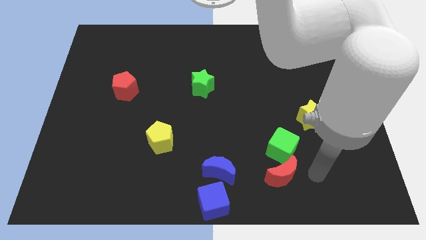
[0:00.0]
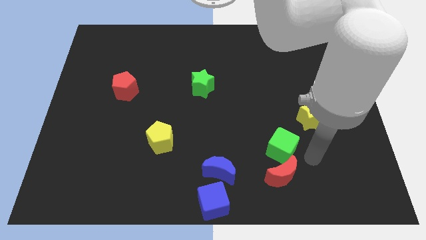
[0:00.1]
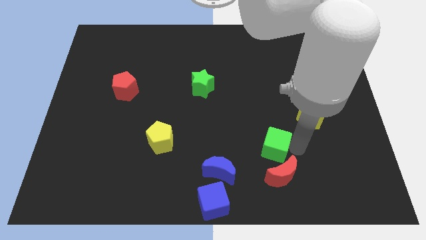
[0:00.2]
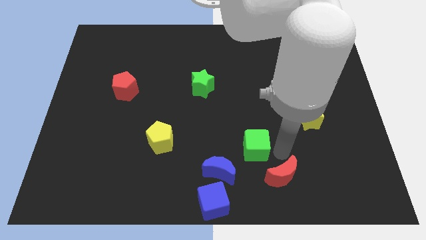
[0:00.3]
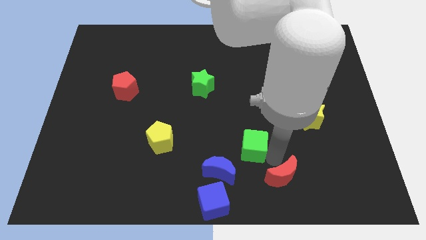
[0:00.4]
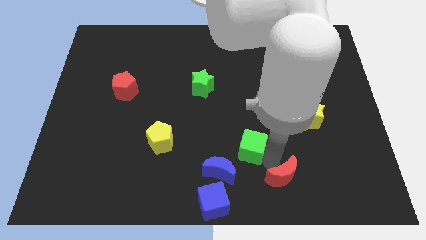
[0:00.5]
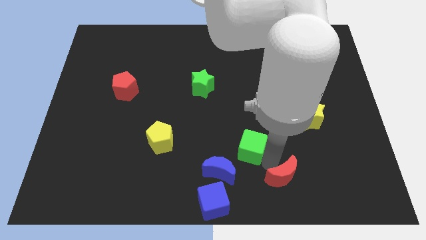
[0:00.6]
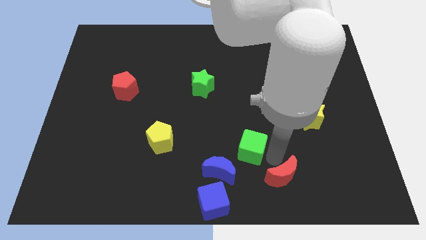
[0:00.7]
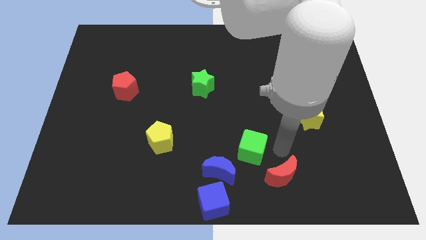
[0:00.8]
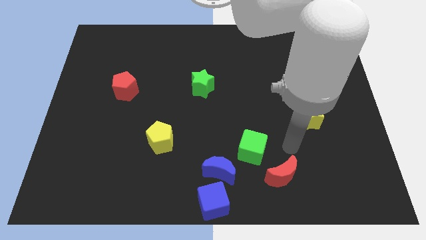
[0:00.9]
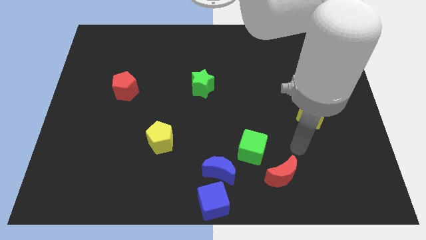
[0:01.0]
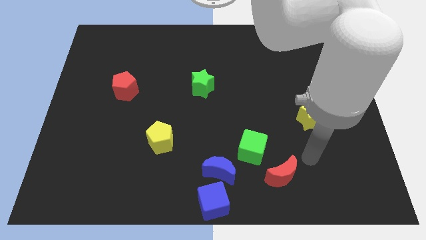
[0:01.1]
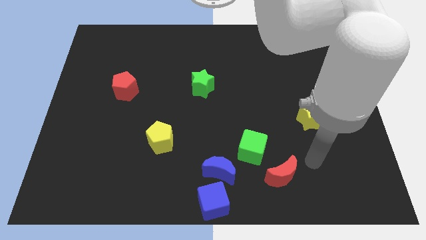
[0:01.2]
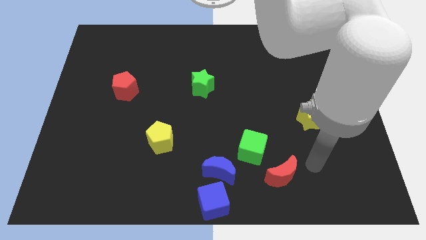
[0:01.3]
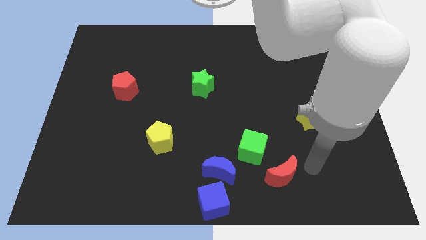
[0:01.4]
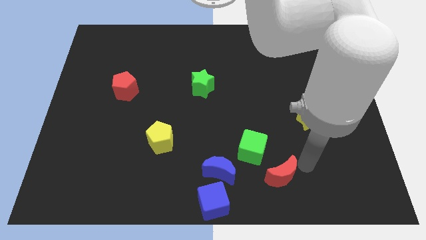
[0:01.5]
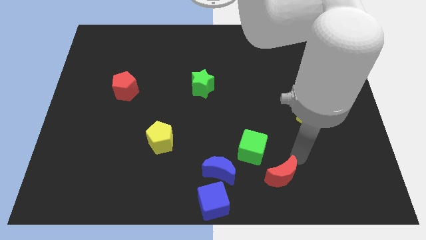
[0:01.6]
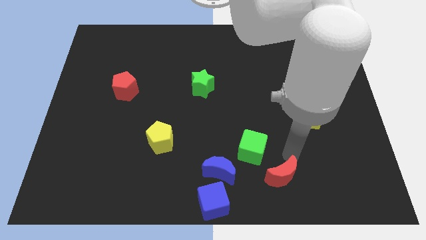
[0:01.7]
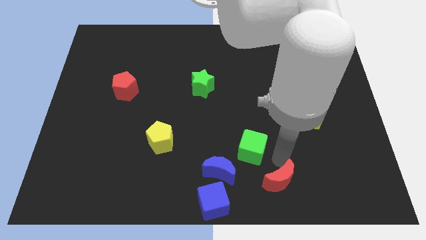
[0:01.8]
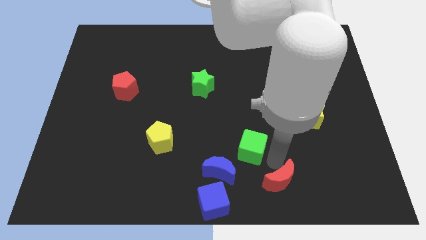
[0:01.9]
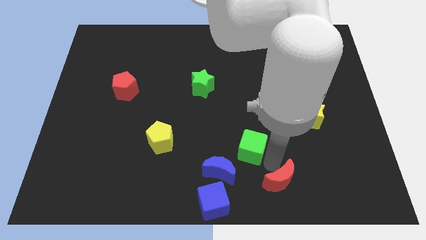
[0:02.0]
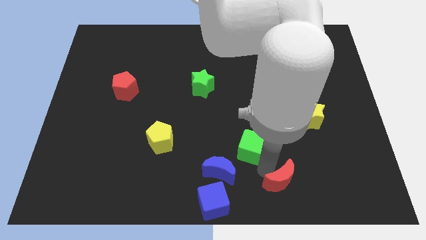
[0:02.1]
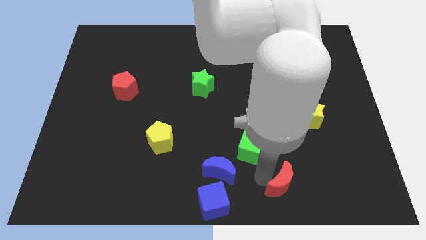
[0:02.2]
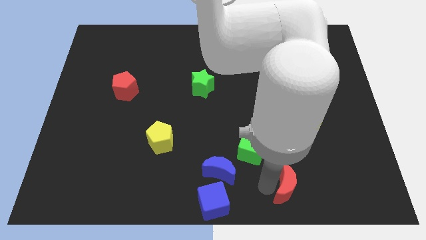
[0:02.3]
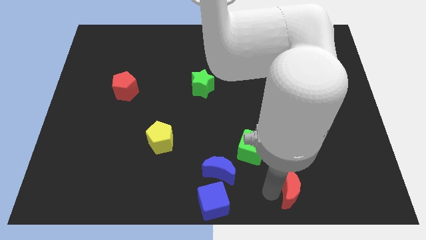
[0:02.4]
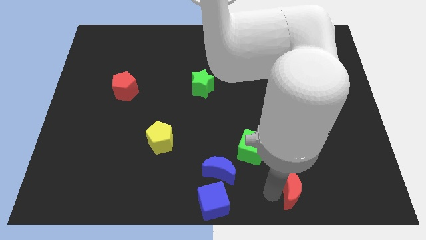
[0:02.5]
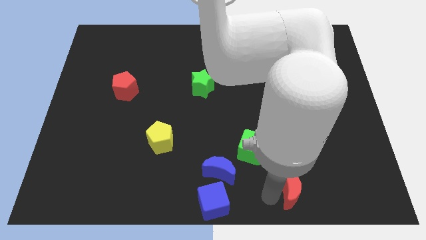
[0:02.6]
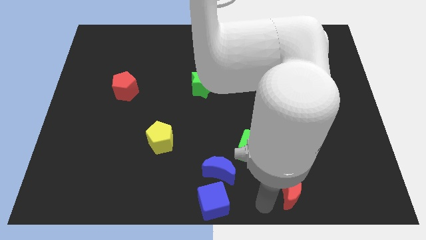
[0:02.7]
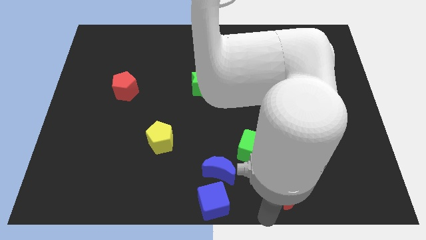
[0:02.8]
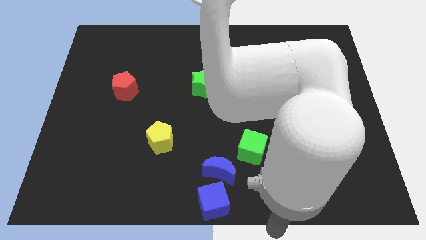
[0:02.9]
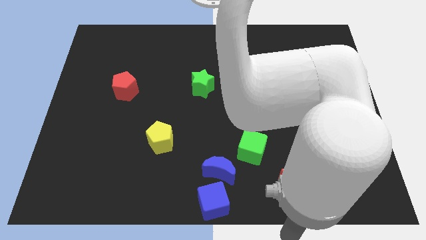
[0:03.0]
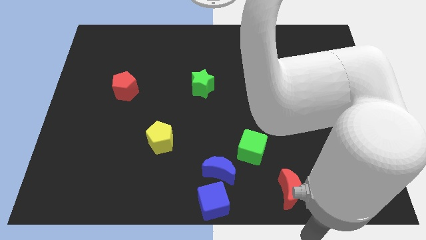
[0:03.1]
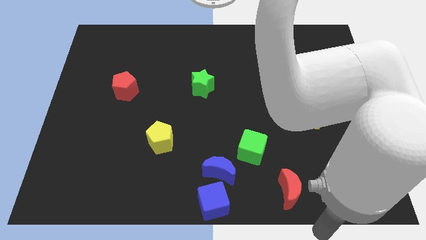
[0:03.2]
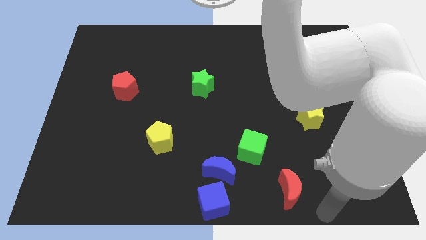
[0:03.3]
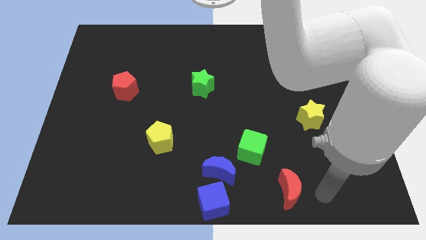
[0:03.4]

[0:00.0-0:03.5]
separate the green cube and the red crescent

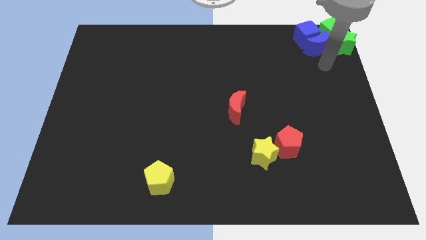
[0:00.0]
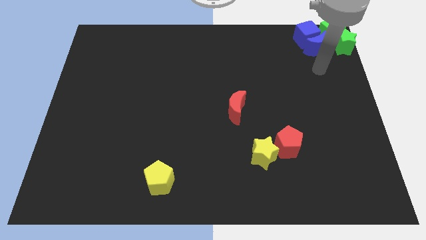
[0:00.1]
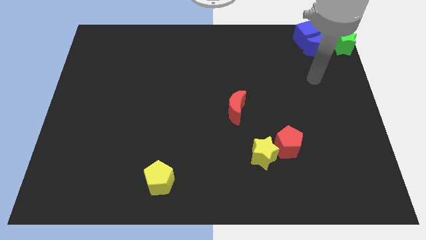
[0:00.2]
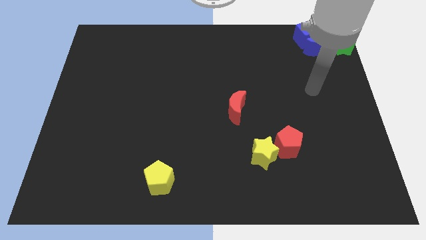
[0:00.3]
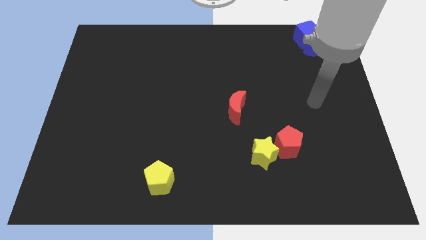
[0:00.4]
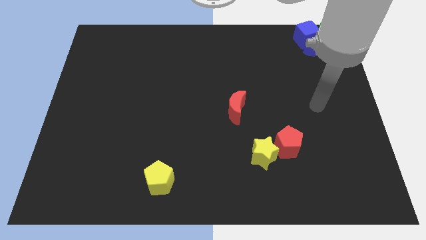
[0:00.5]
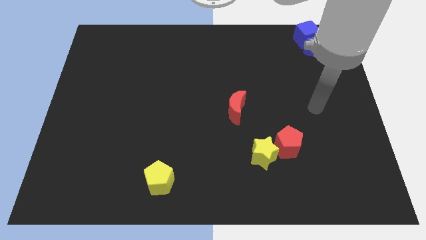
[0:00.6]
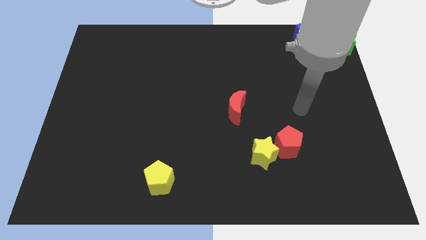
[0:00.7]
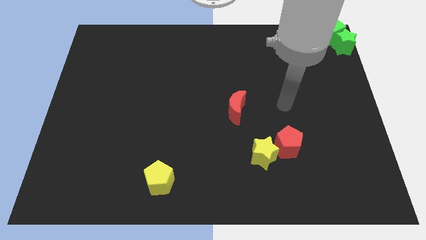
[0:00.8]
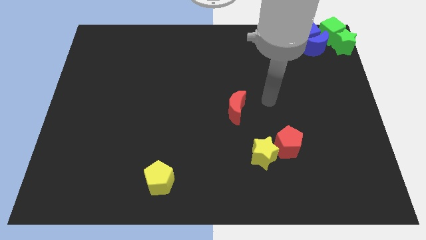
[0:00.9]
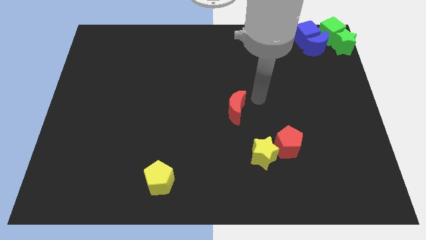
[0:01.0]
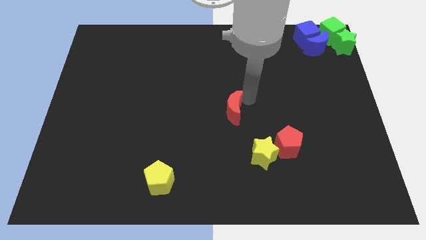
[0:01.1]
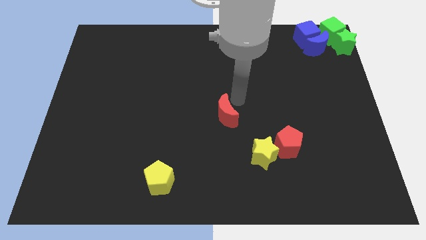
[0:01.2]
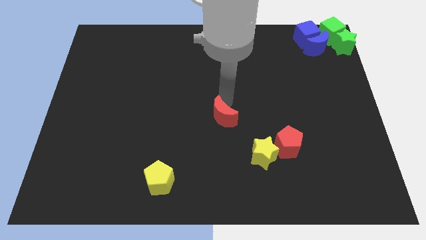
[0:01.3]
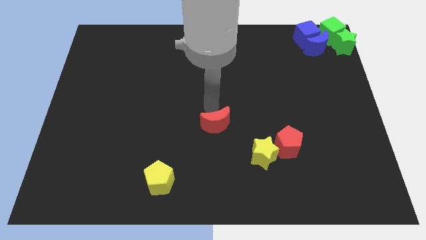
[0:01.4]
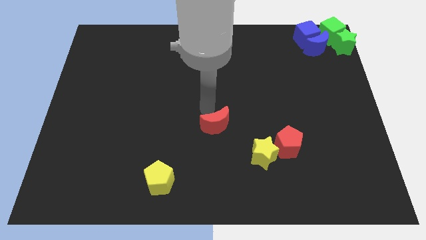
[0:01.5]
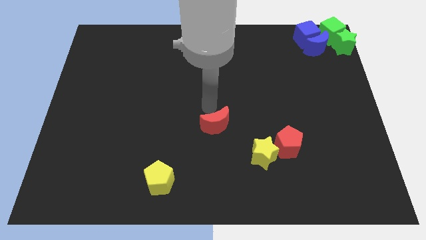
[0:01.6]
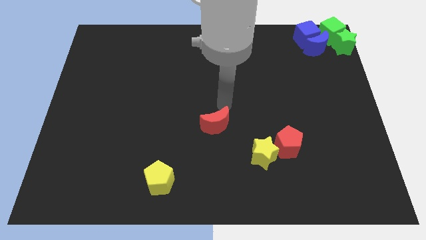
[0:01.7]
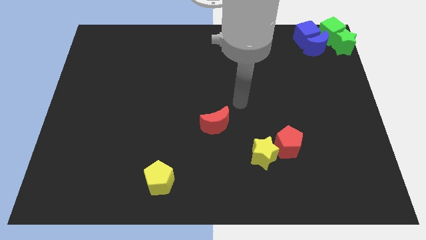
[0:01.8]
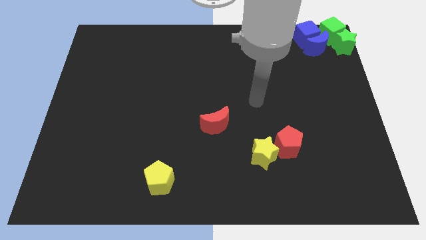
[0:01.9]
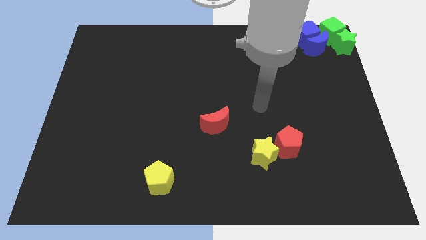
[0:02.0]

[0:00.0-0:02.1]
move the red moon diagonally on the top left side of the yellow star

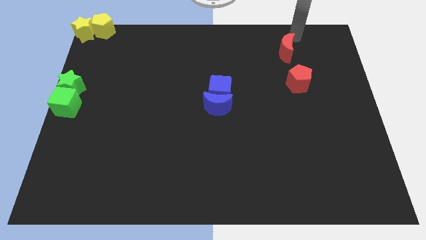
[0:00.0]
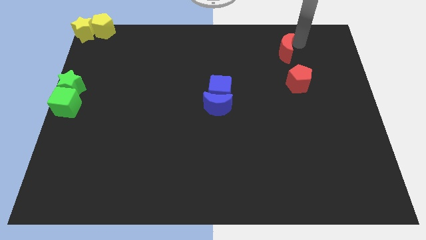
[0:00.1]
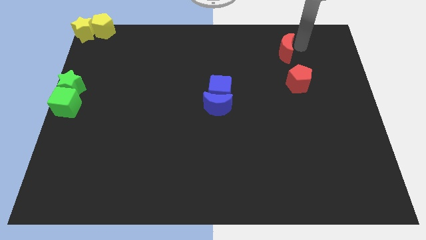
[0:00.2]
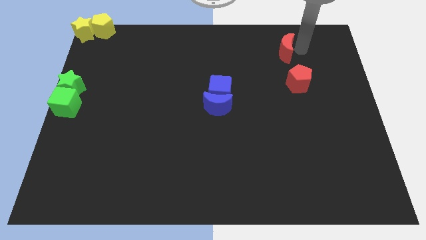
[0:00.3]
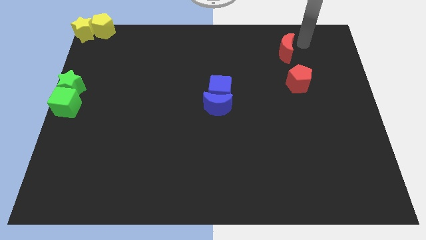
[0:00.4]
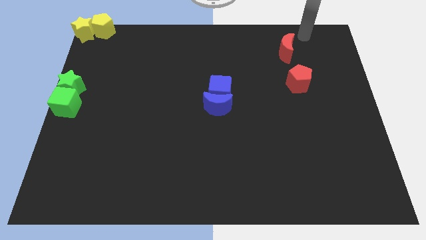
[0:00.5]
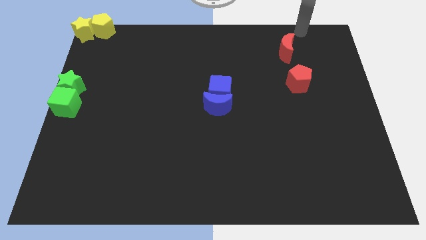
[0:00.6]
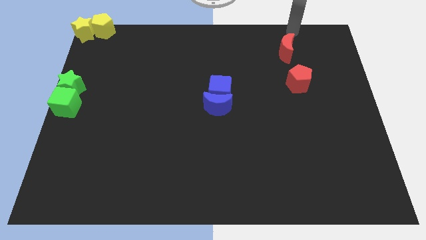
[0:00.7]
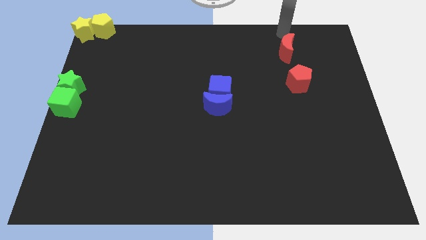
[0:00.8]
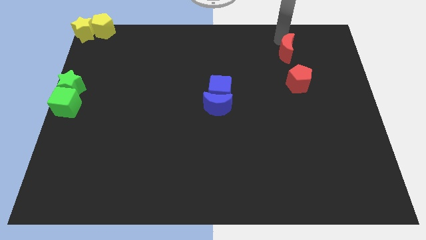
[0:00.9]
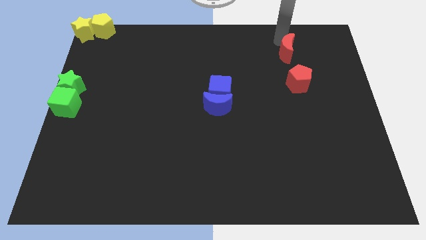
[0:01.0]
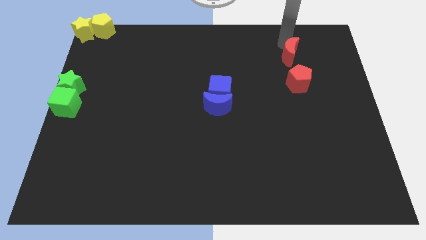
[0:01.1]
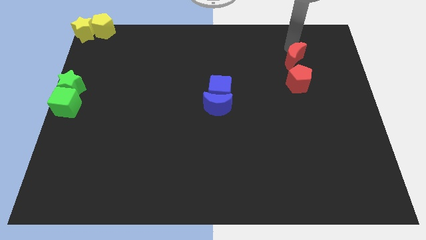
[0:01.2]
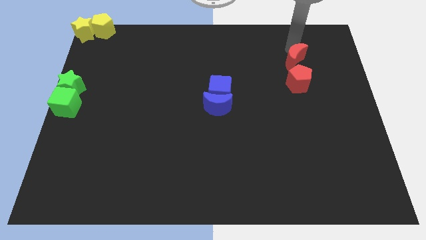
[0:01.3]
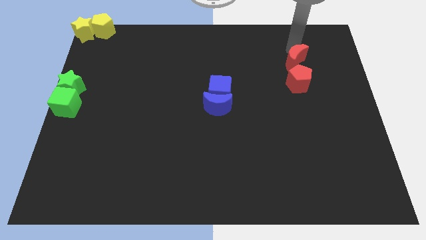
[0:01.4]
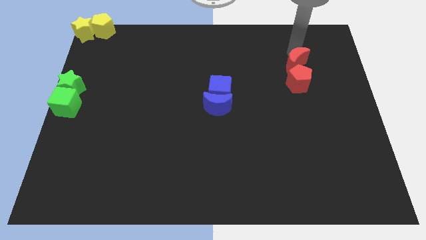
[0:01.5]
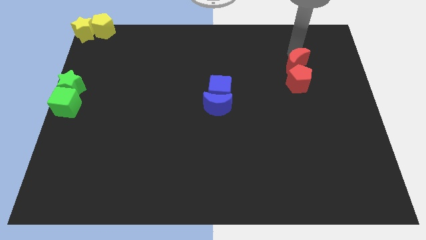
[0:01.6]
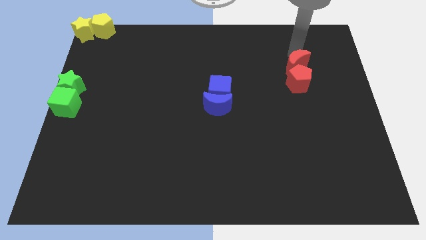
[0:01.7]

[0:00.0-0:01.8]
place the red moon at the top of red pentagon

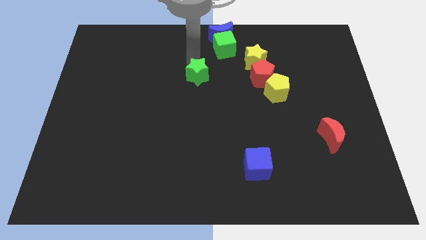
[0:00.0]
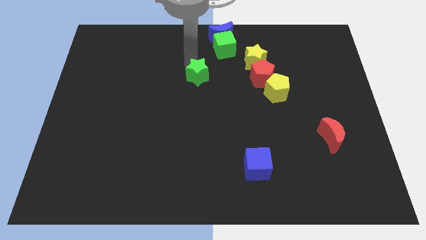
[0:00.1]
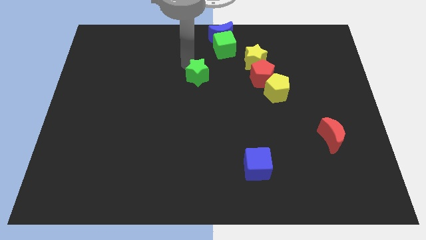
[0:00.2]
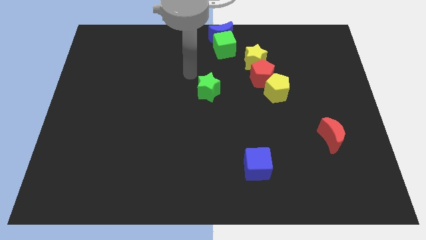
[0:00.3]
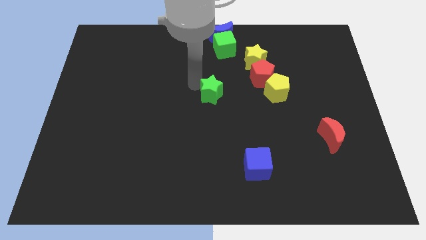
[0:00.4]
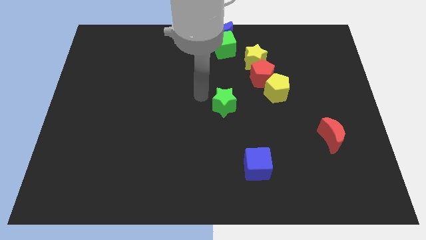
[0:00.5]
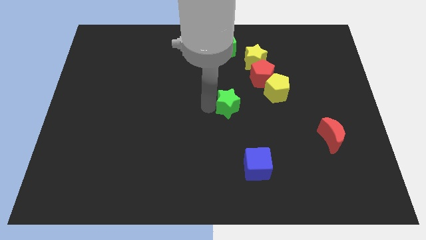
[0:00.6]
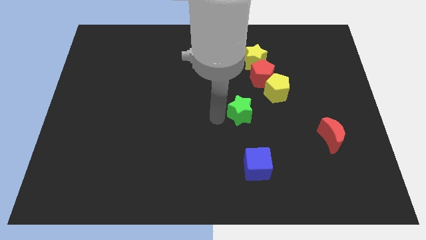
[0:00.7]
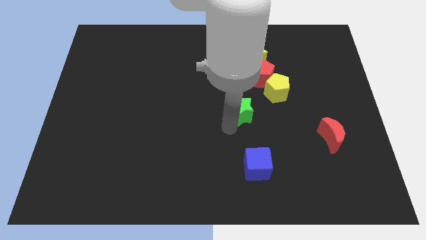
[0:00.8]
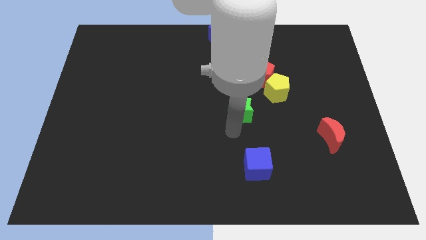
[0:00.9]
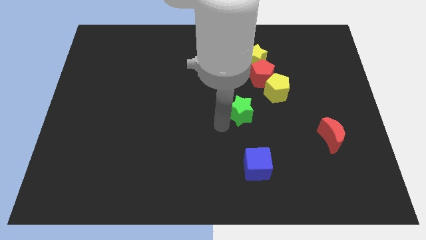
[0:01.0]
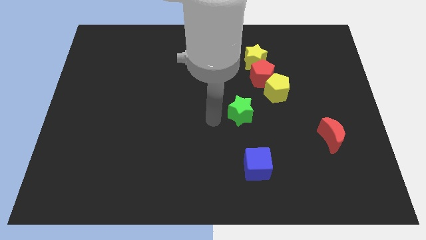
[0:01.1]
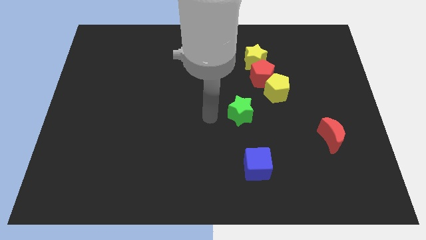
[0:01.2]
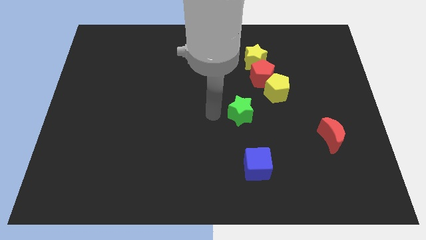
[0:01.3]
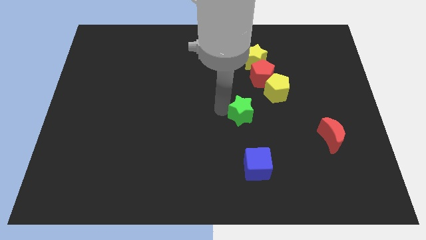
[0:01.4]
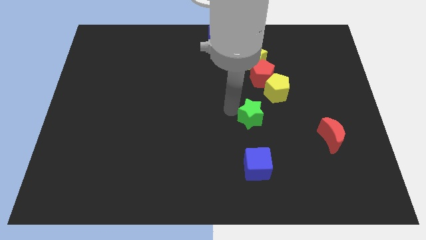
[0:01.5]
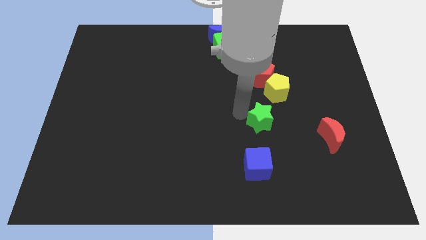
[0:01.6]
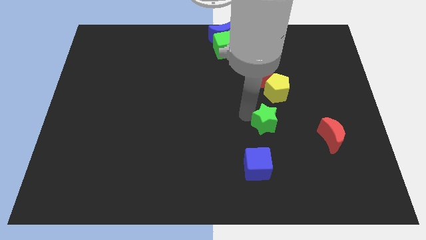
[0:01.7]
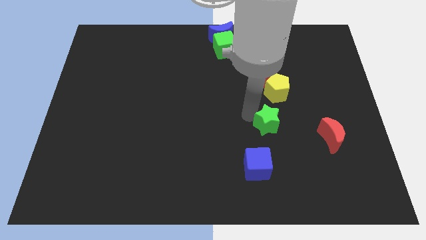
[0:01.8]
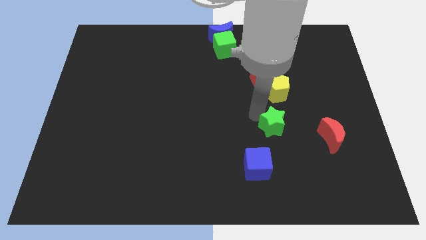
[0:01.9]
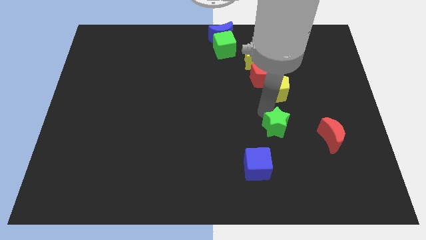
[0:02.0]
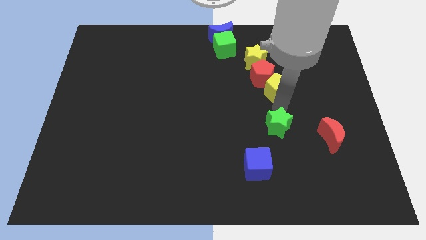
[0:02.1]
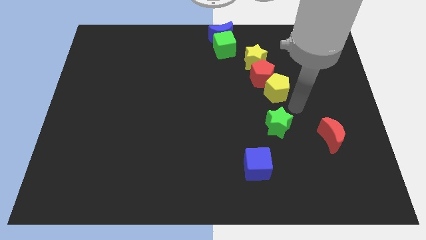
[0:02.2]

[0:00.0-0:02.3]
move the green star to the bottom of the yellow pentagon
